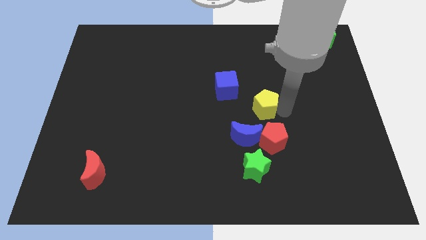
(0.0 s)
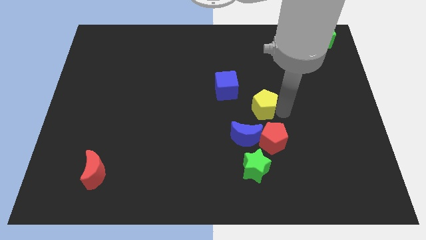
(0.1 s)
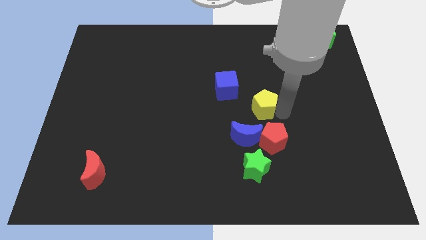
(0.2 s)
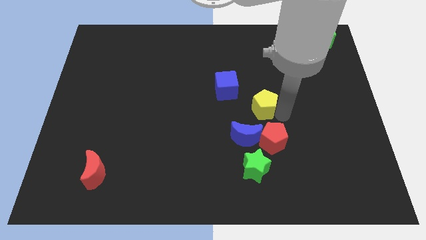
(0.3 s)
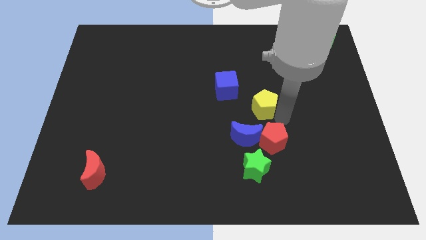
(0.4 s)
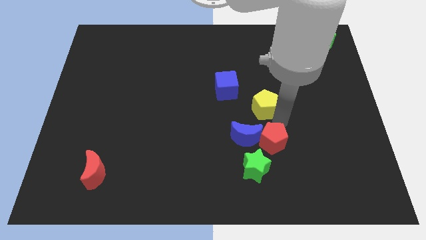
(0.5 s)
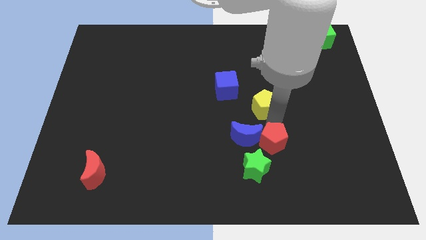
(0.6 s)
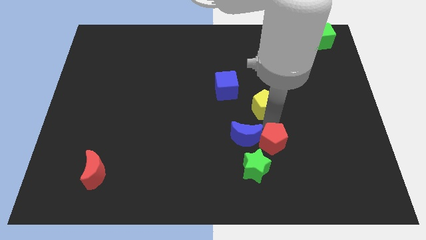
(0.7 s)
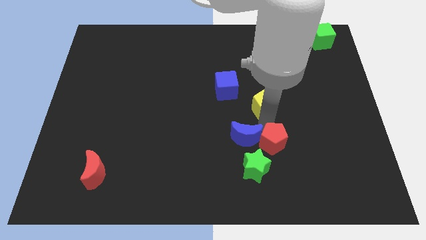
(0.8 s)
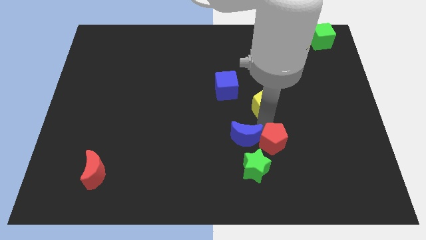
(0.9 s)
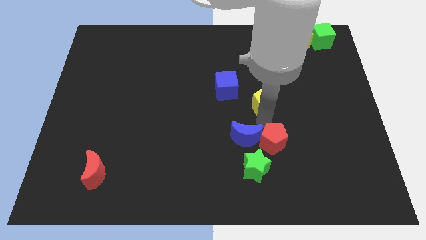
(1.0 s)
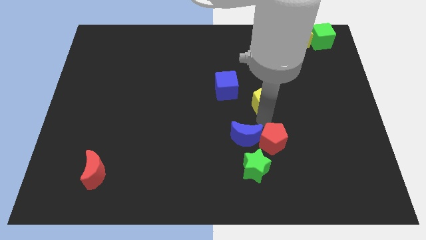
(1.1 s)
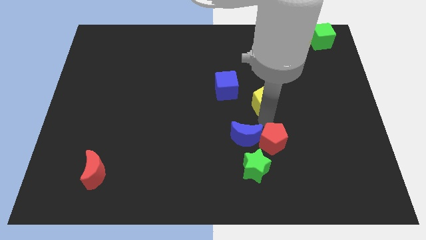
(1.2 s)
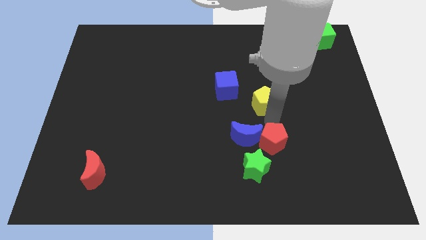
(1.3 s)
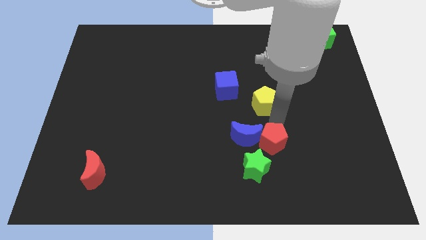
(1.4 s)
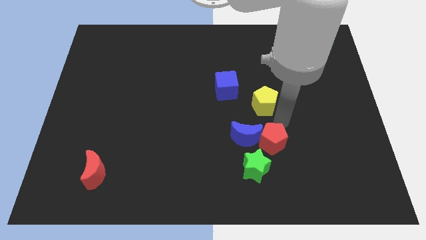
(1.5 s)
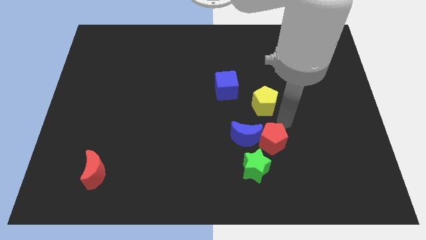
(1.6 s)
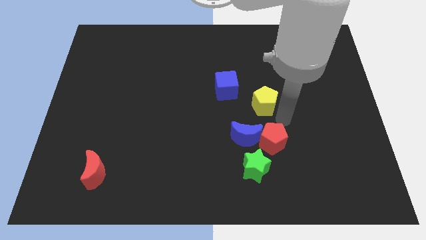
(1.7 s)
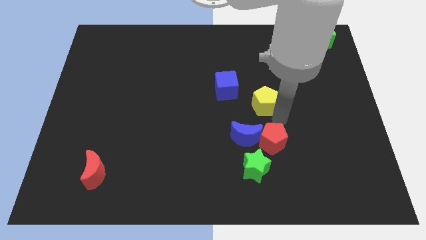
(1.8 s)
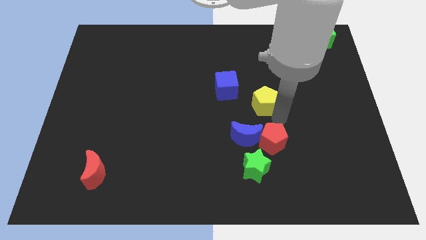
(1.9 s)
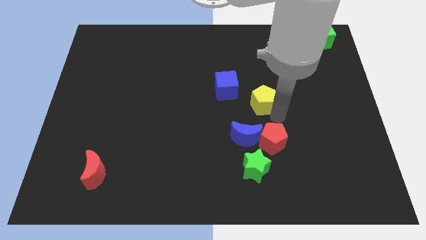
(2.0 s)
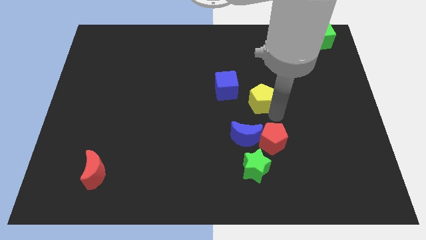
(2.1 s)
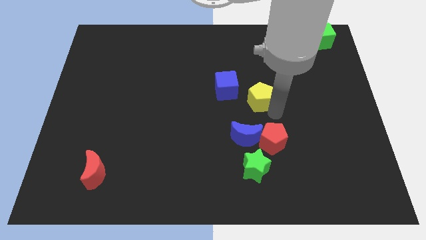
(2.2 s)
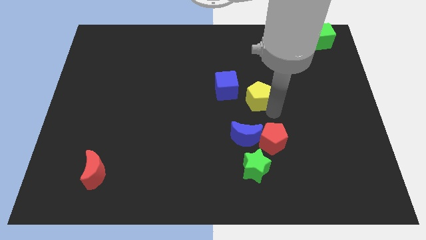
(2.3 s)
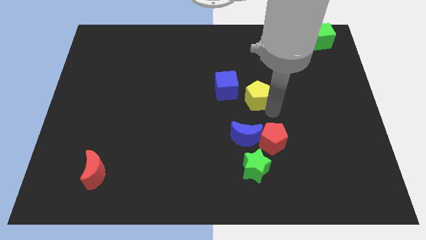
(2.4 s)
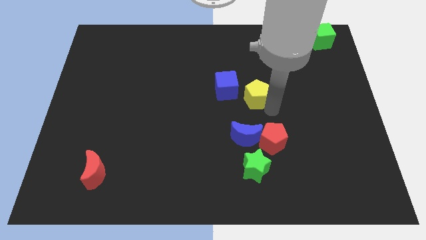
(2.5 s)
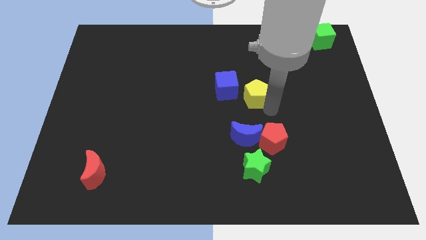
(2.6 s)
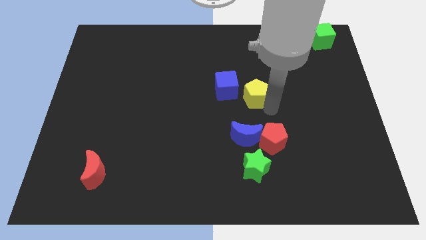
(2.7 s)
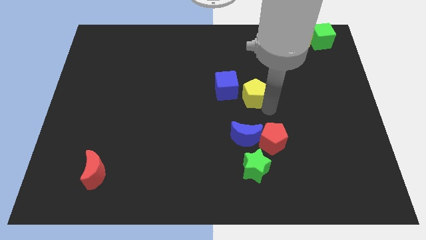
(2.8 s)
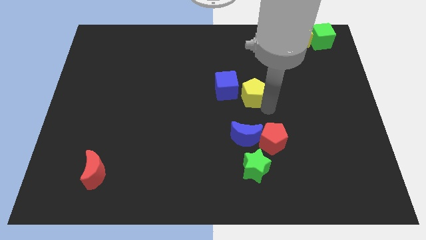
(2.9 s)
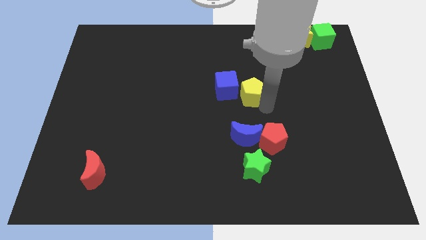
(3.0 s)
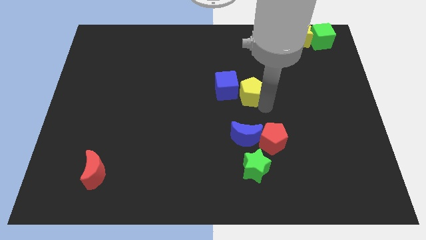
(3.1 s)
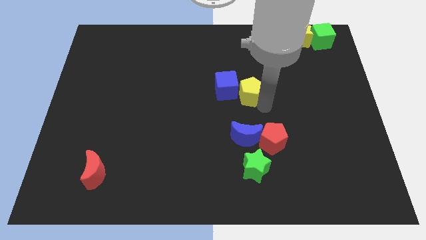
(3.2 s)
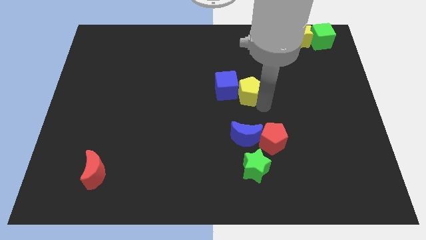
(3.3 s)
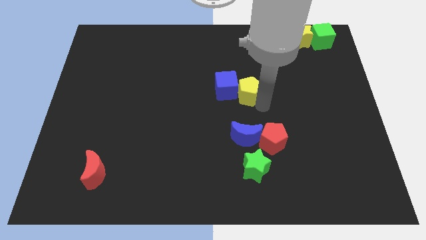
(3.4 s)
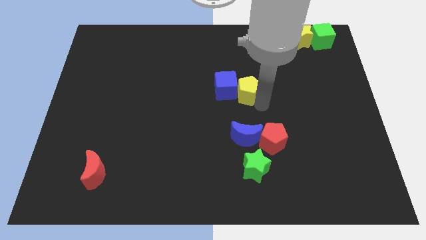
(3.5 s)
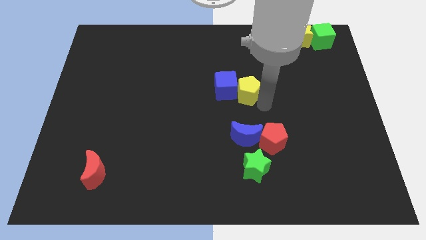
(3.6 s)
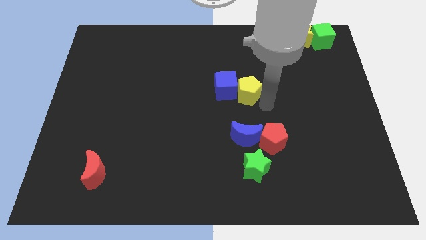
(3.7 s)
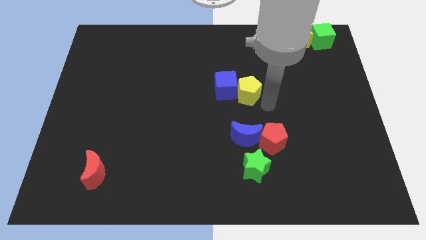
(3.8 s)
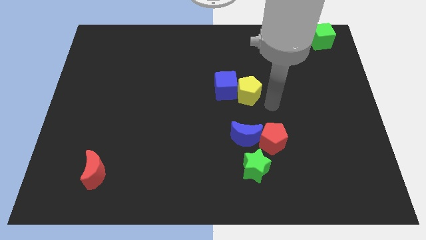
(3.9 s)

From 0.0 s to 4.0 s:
move yellow pentagon and red pentagon apart

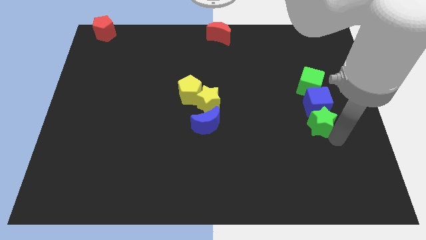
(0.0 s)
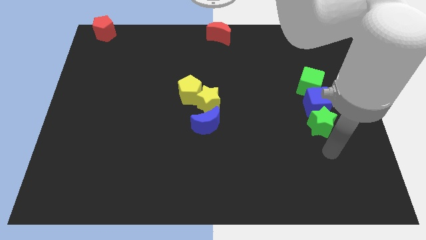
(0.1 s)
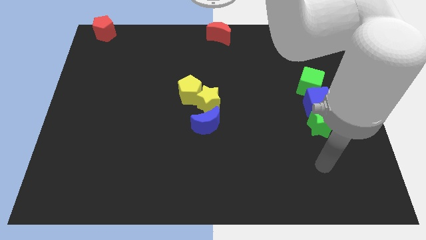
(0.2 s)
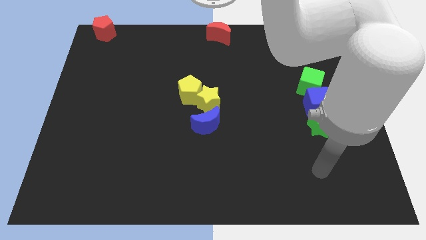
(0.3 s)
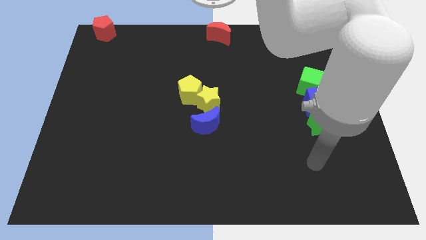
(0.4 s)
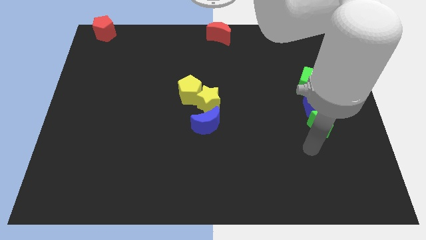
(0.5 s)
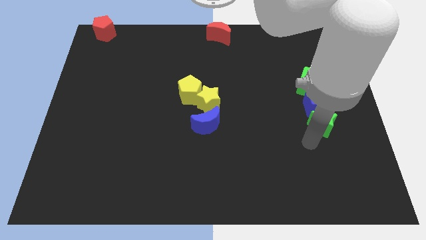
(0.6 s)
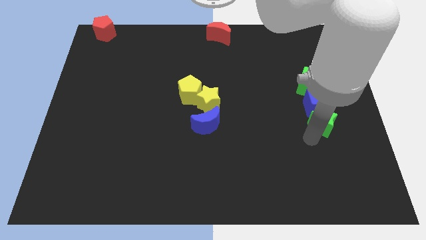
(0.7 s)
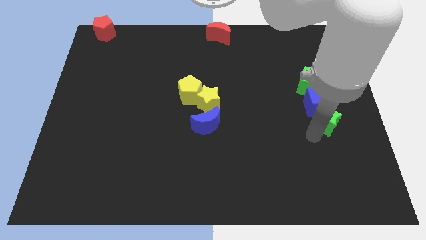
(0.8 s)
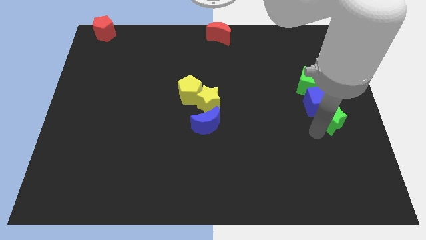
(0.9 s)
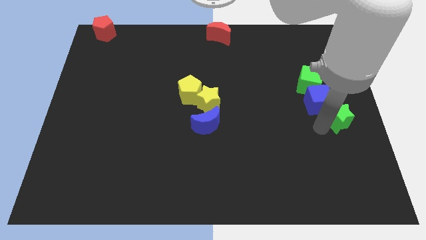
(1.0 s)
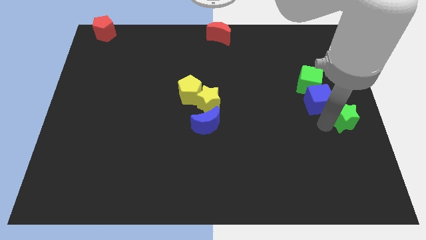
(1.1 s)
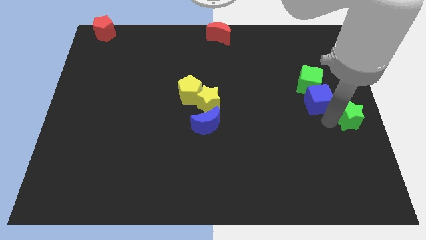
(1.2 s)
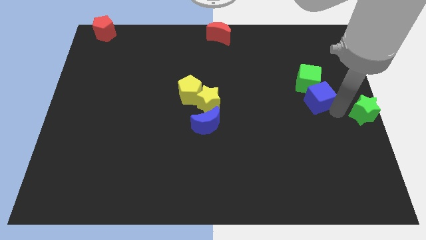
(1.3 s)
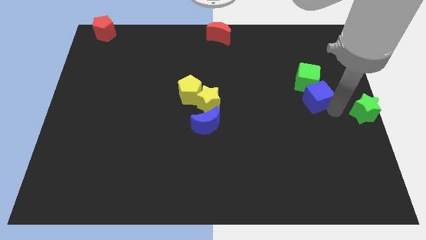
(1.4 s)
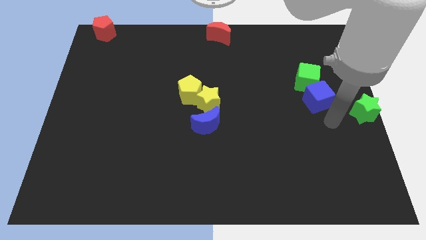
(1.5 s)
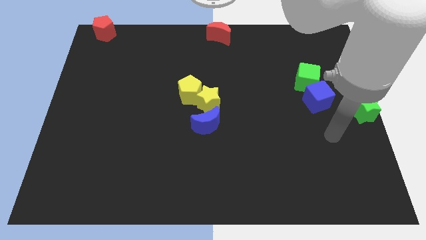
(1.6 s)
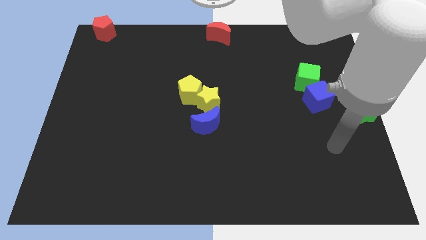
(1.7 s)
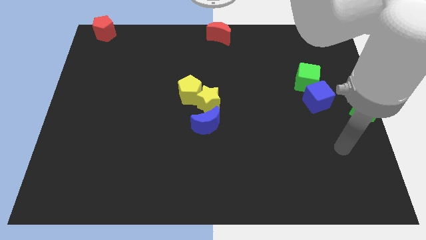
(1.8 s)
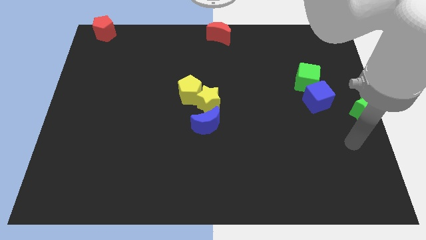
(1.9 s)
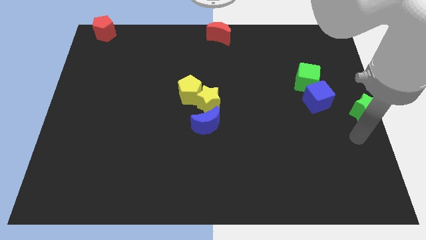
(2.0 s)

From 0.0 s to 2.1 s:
slide green star to the center right

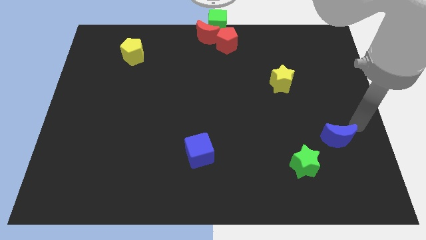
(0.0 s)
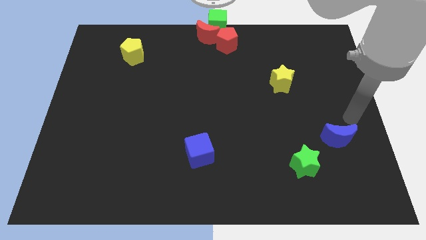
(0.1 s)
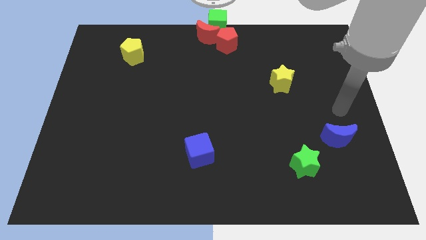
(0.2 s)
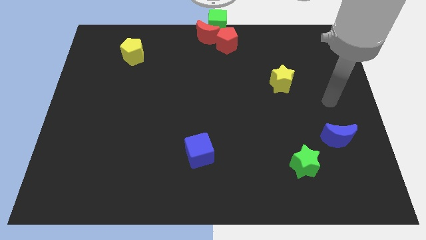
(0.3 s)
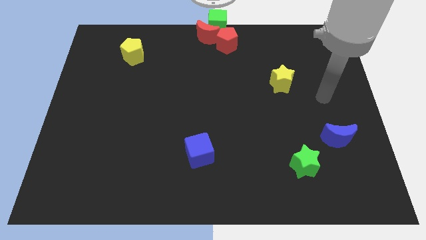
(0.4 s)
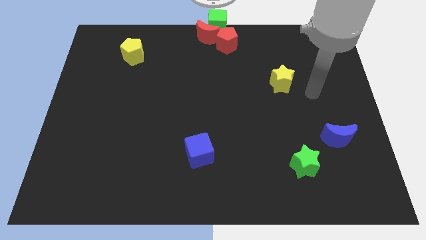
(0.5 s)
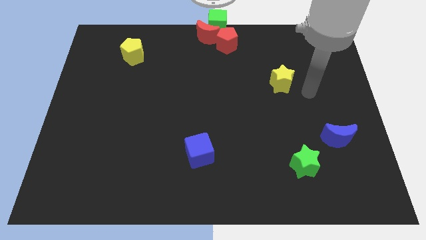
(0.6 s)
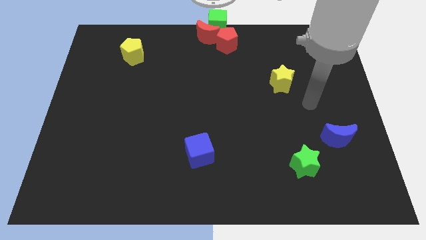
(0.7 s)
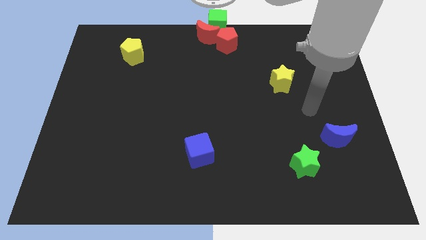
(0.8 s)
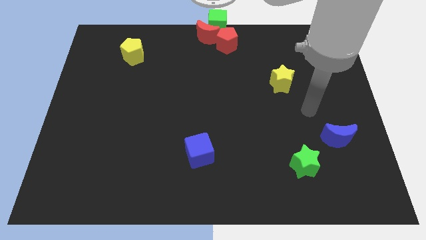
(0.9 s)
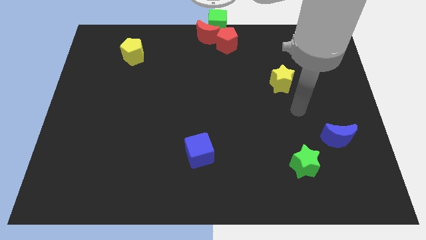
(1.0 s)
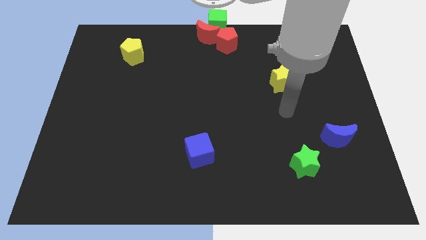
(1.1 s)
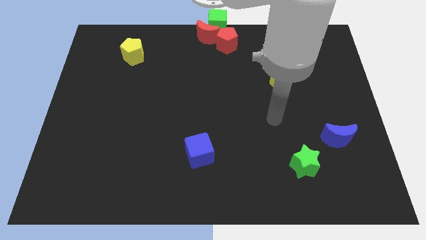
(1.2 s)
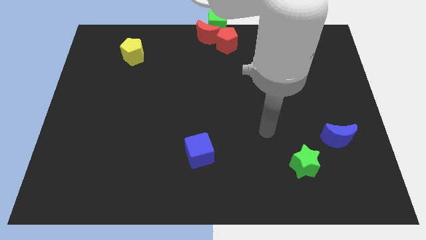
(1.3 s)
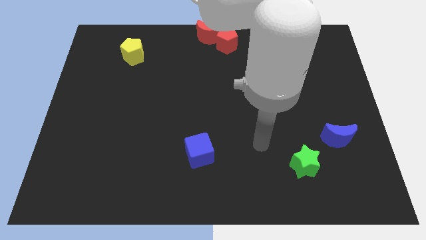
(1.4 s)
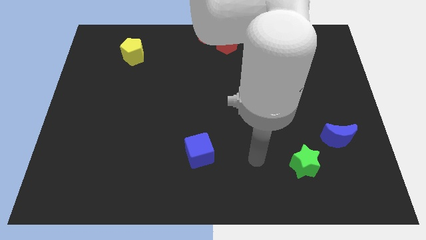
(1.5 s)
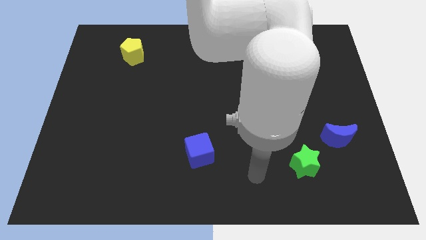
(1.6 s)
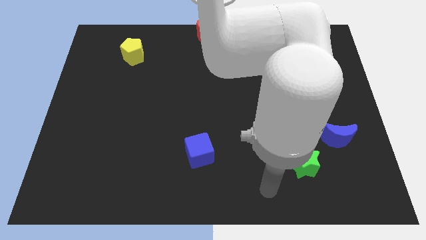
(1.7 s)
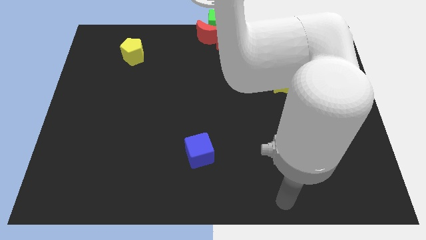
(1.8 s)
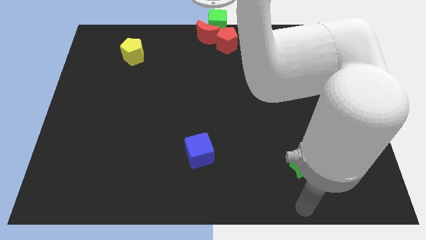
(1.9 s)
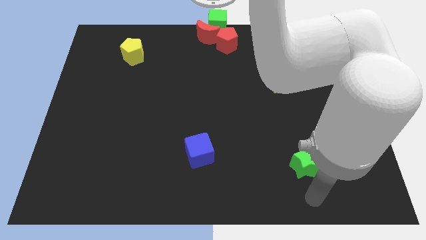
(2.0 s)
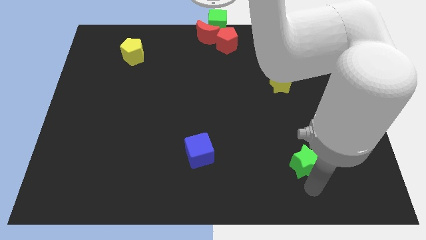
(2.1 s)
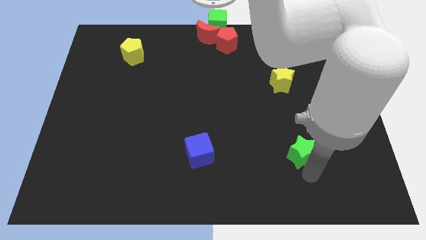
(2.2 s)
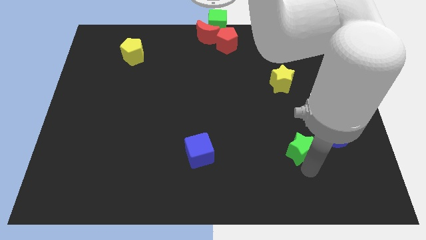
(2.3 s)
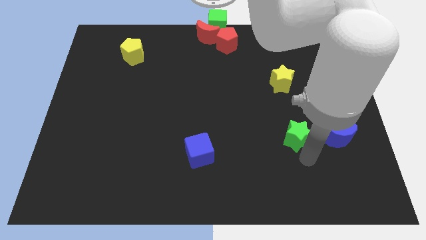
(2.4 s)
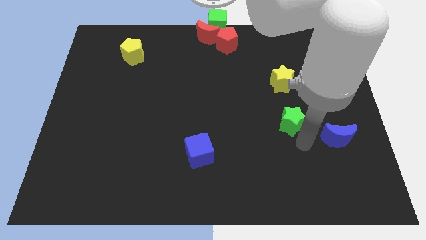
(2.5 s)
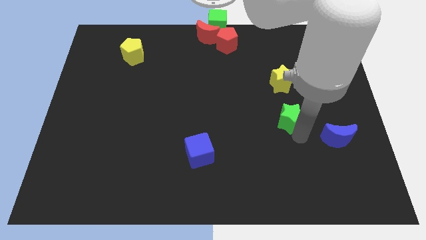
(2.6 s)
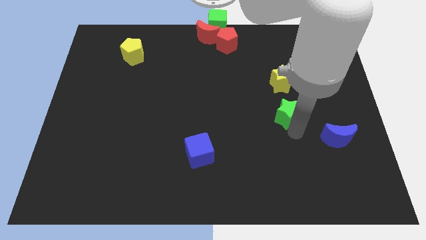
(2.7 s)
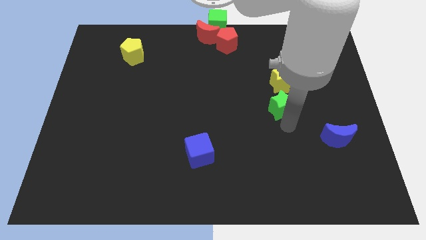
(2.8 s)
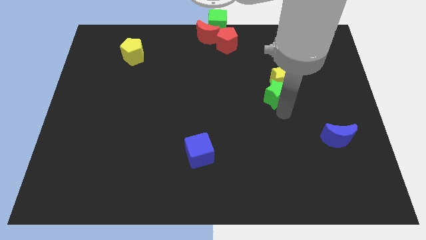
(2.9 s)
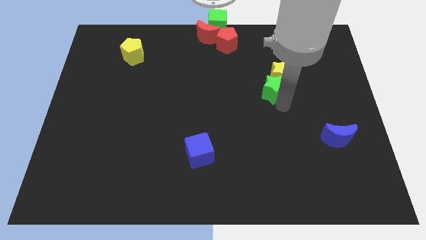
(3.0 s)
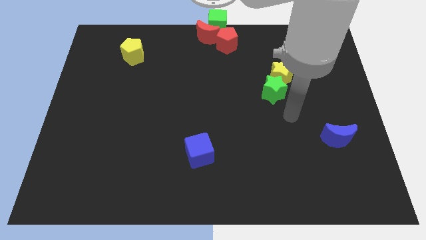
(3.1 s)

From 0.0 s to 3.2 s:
push the green star into the yellow star
